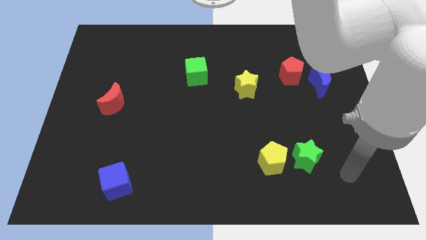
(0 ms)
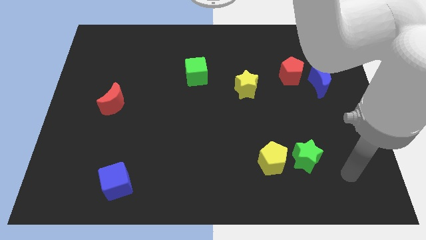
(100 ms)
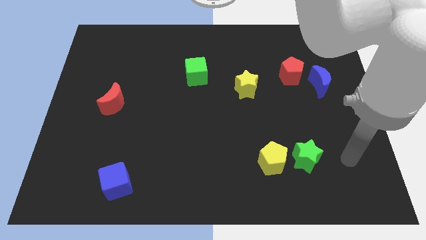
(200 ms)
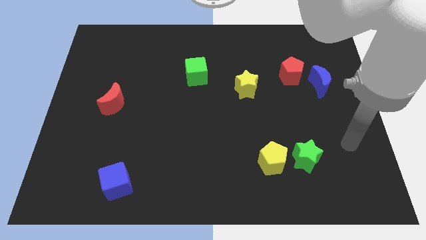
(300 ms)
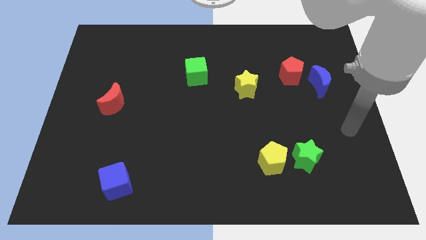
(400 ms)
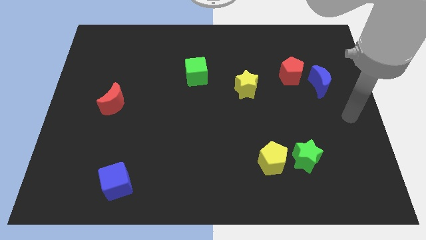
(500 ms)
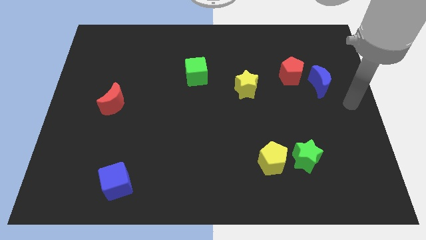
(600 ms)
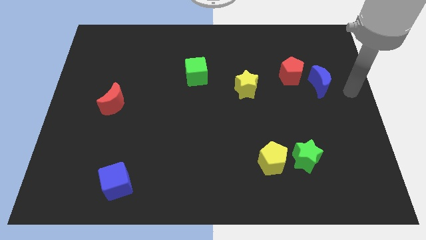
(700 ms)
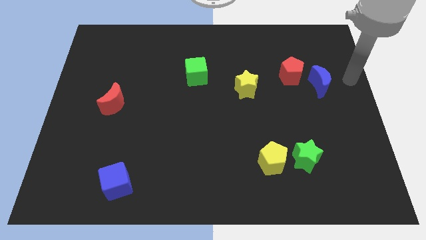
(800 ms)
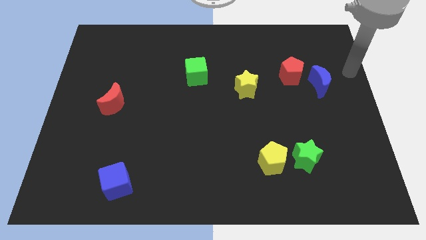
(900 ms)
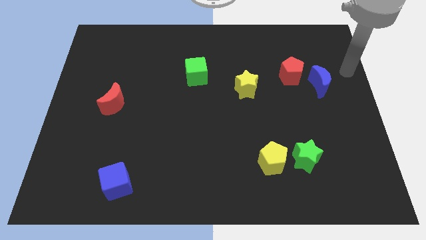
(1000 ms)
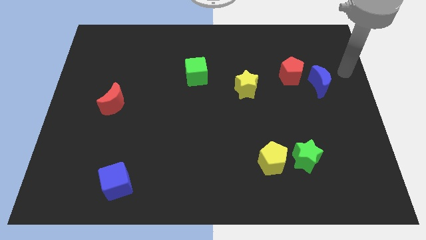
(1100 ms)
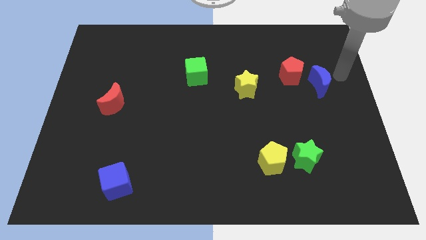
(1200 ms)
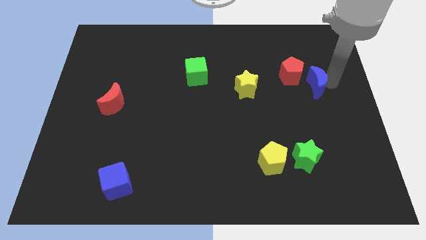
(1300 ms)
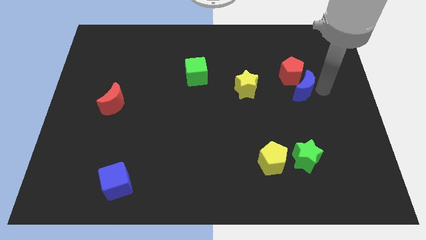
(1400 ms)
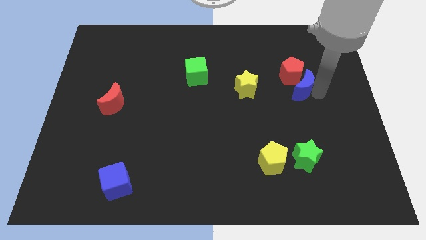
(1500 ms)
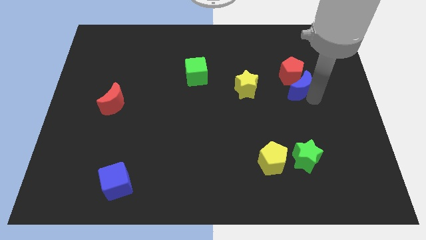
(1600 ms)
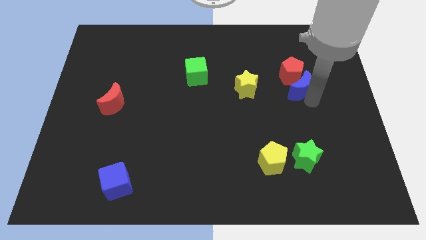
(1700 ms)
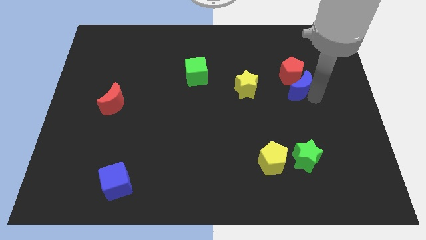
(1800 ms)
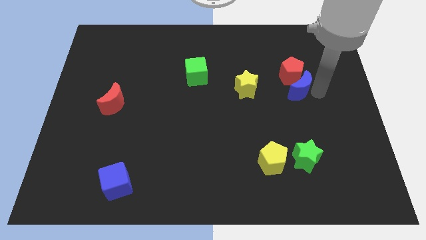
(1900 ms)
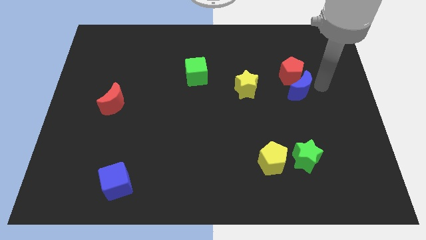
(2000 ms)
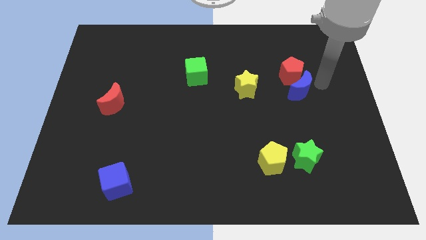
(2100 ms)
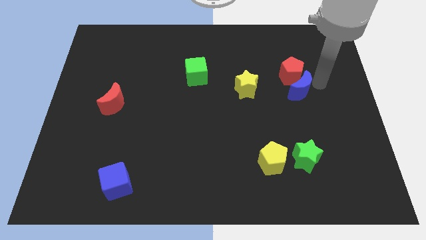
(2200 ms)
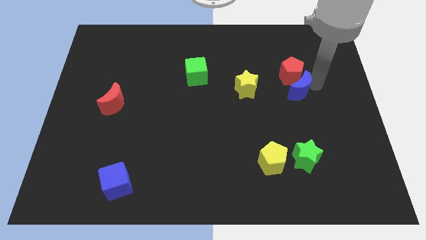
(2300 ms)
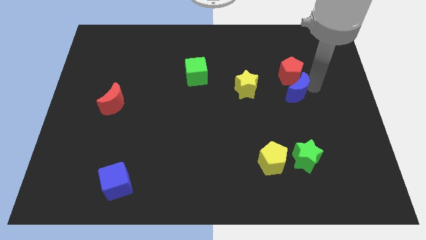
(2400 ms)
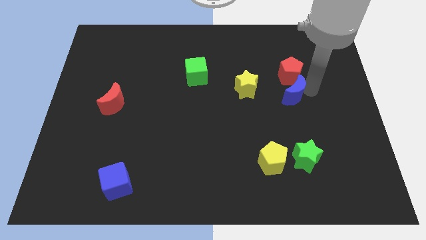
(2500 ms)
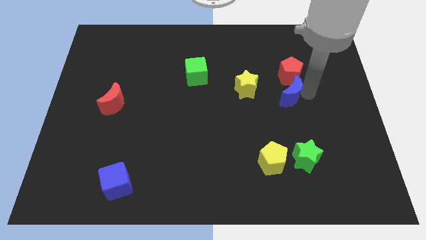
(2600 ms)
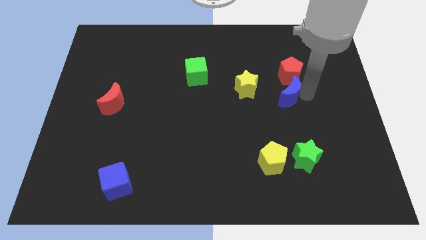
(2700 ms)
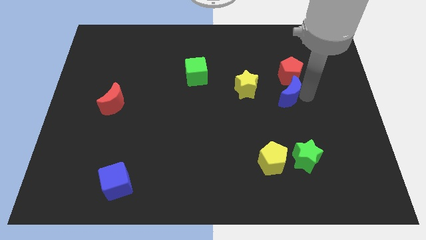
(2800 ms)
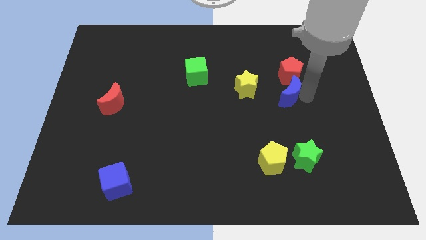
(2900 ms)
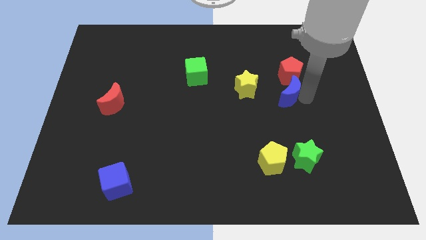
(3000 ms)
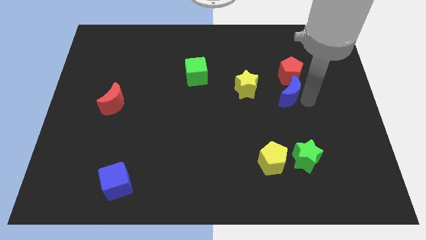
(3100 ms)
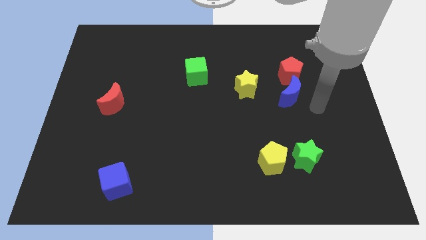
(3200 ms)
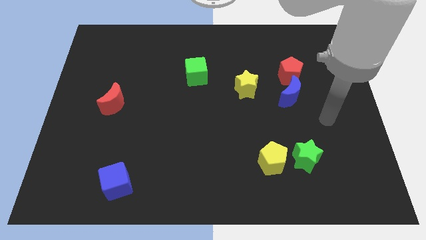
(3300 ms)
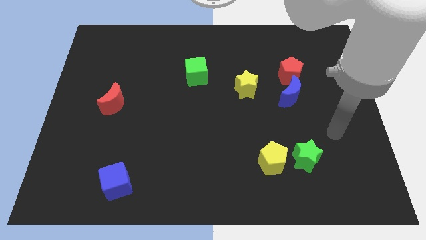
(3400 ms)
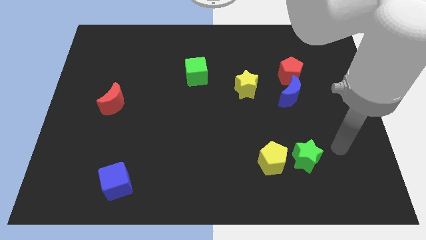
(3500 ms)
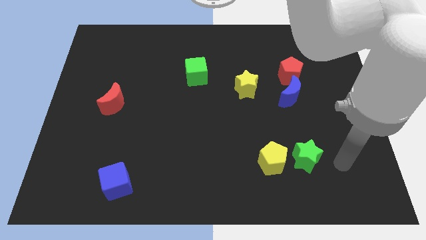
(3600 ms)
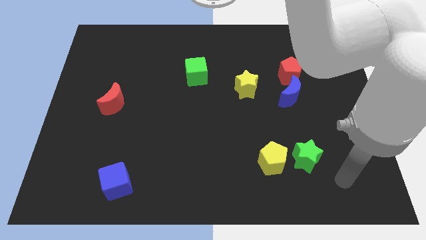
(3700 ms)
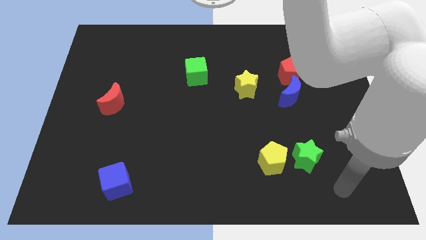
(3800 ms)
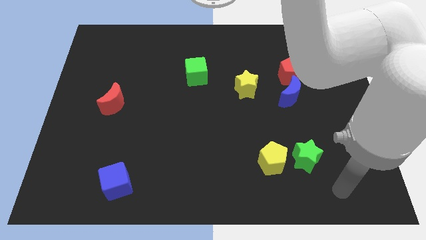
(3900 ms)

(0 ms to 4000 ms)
push blue half moon slightly towards red pentagon

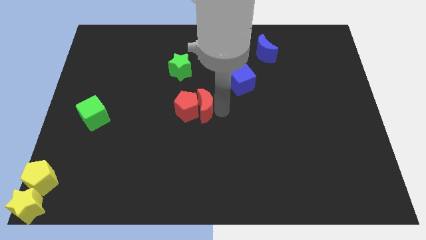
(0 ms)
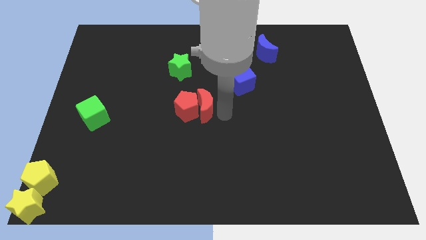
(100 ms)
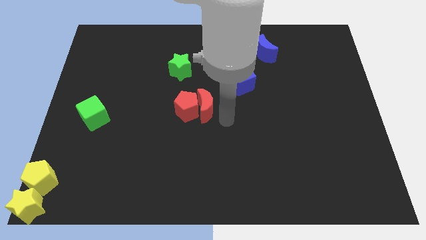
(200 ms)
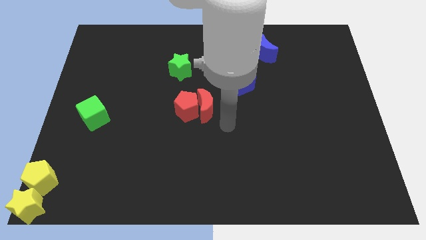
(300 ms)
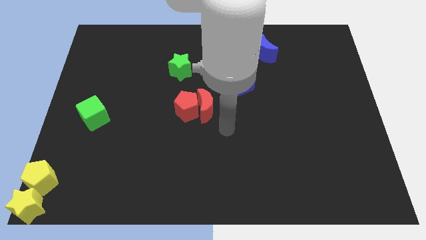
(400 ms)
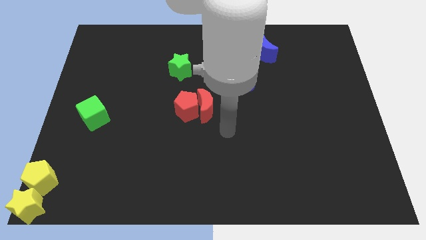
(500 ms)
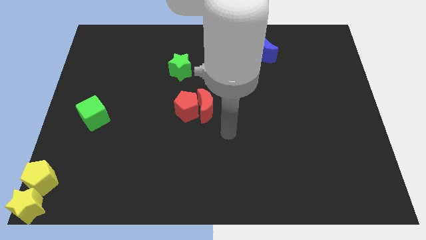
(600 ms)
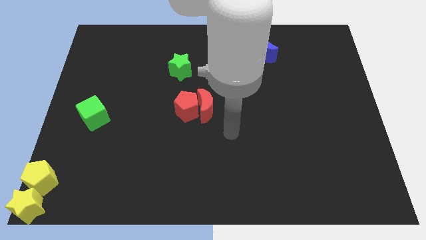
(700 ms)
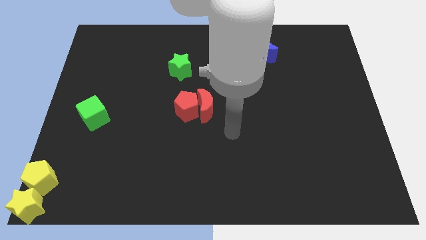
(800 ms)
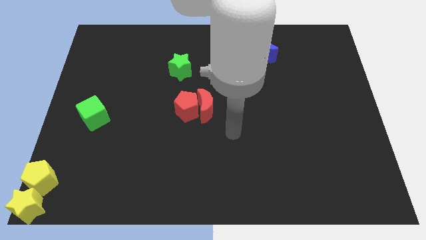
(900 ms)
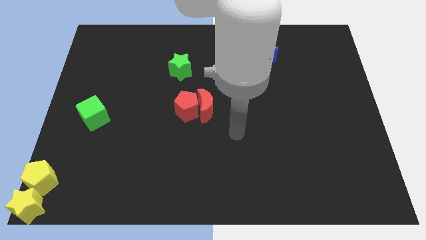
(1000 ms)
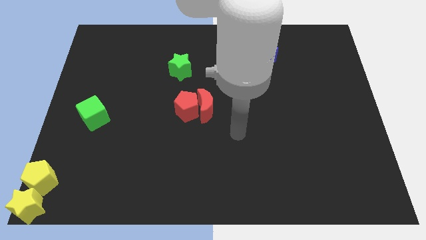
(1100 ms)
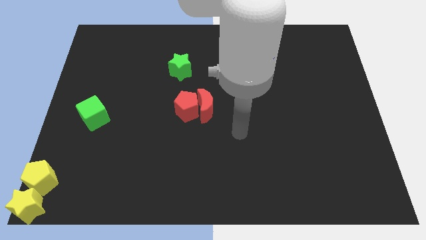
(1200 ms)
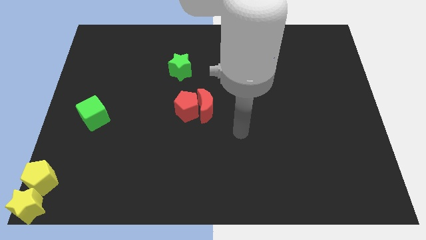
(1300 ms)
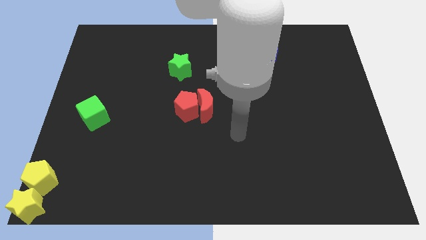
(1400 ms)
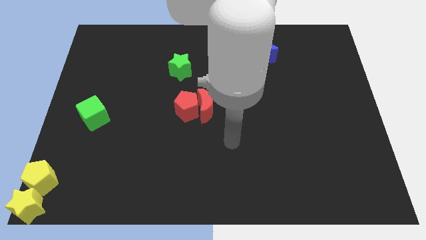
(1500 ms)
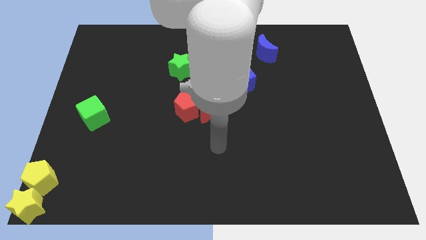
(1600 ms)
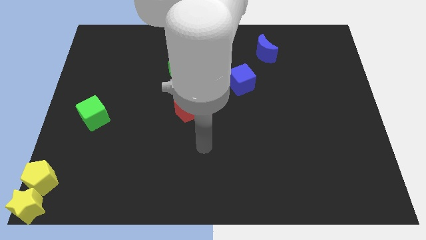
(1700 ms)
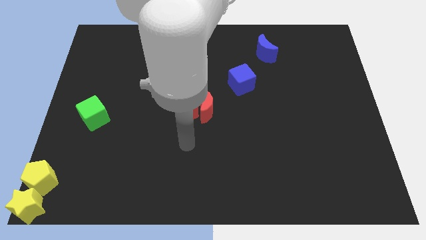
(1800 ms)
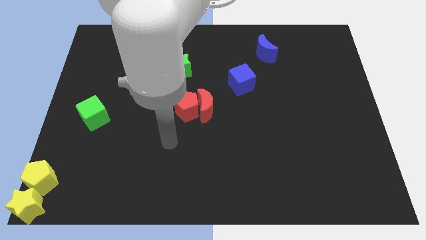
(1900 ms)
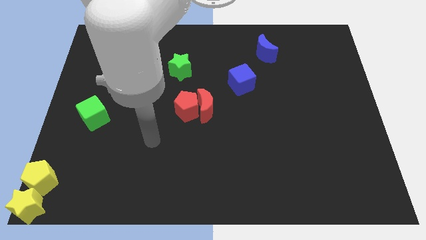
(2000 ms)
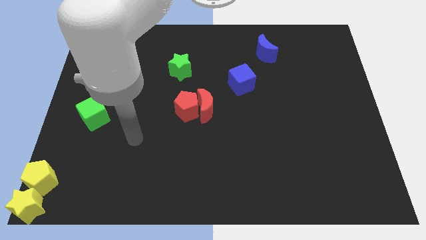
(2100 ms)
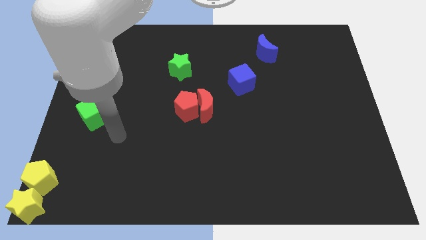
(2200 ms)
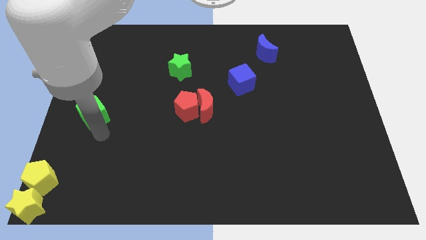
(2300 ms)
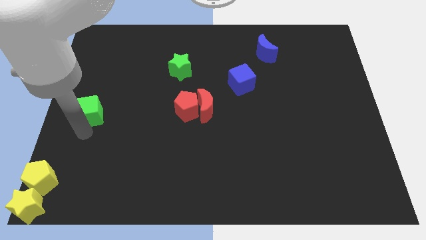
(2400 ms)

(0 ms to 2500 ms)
move your arm away from the red moon

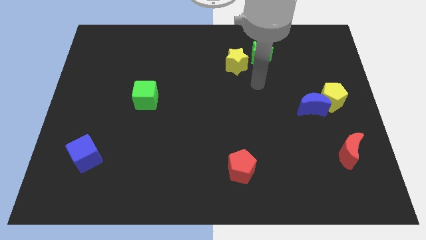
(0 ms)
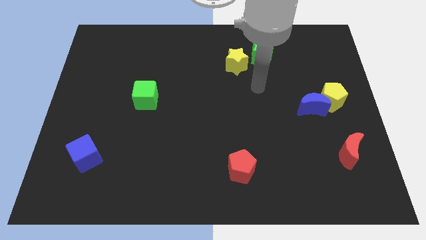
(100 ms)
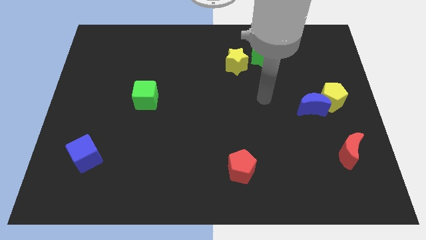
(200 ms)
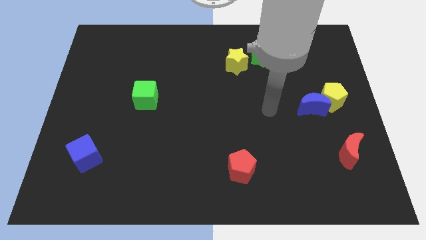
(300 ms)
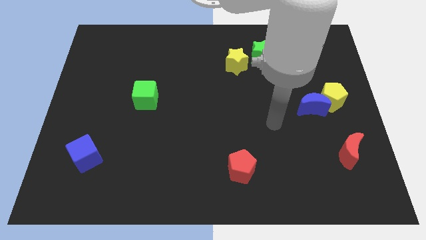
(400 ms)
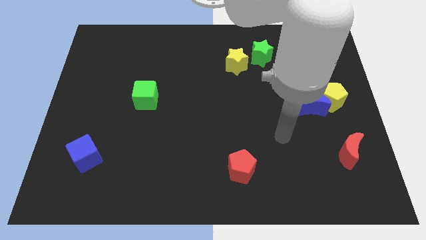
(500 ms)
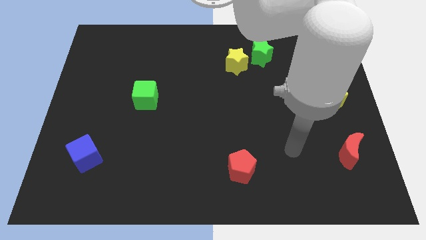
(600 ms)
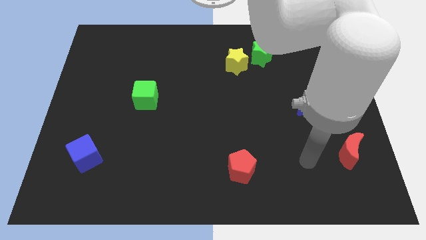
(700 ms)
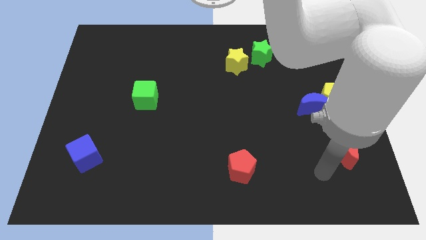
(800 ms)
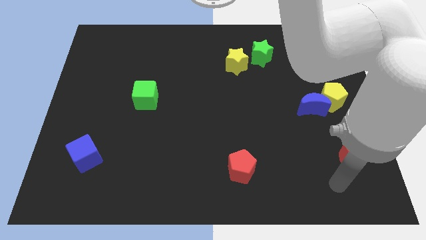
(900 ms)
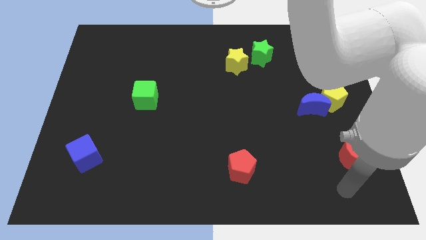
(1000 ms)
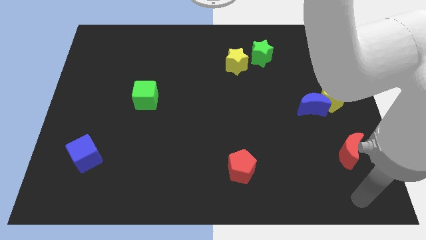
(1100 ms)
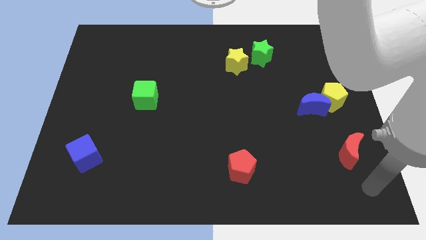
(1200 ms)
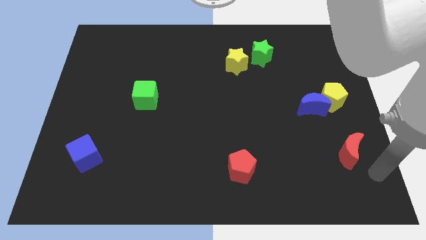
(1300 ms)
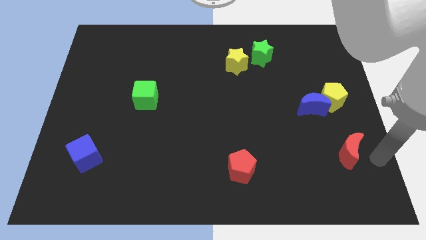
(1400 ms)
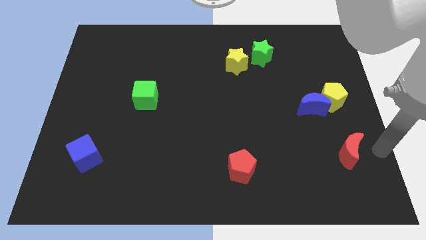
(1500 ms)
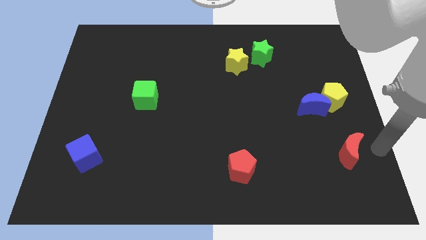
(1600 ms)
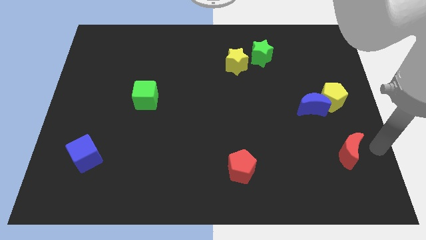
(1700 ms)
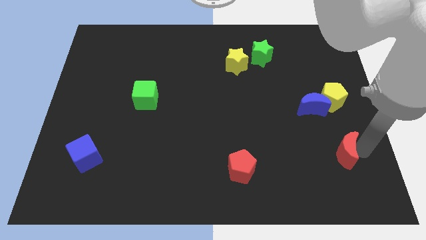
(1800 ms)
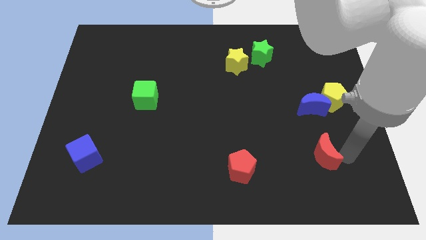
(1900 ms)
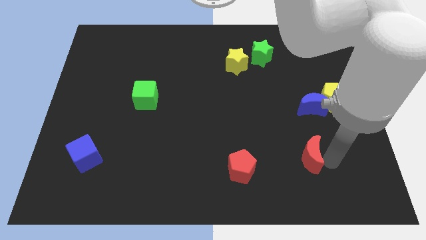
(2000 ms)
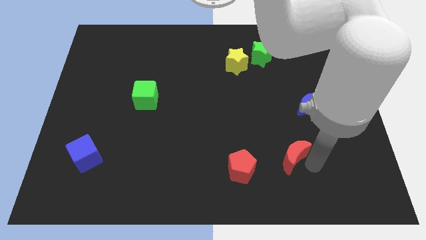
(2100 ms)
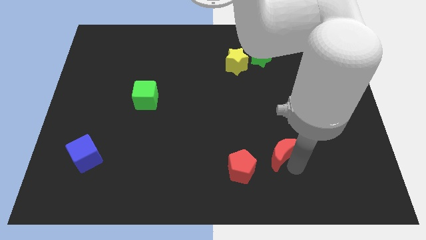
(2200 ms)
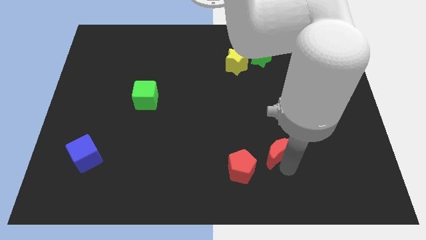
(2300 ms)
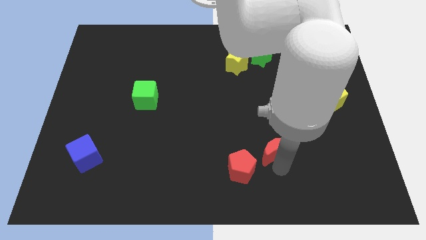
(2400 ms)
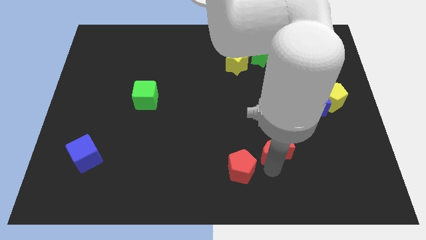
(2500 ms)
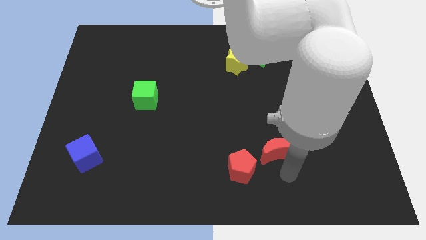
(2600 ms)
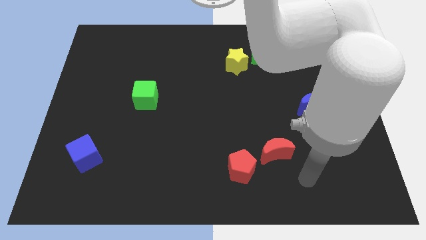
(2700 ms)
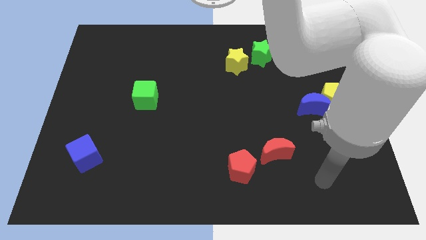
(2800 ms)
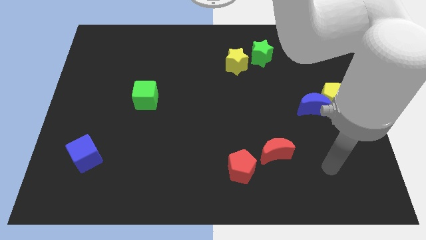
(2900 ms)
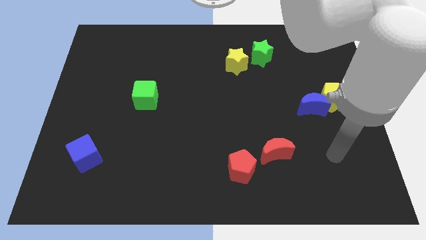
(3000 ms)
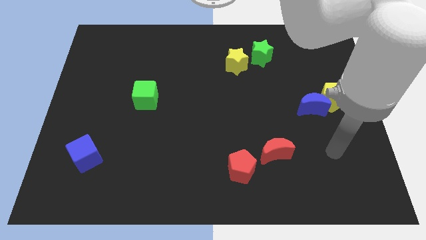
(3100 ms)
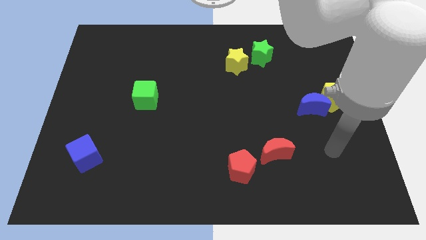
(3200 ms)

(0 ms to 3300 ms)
place the red moon diagonally to the top right of the red pentagon
